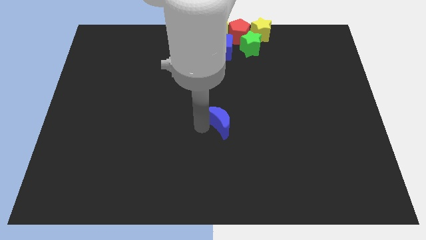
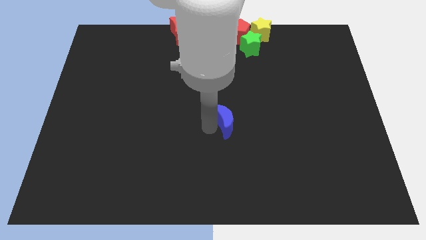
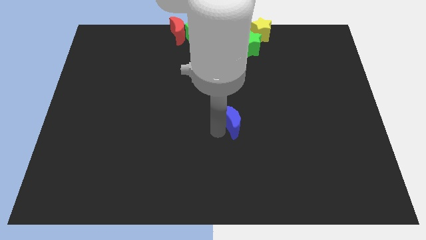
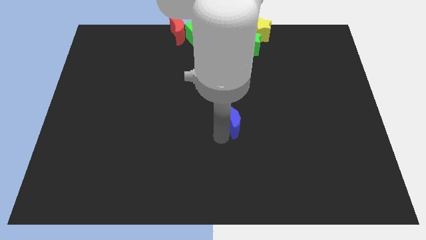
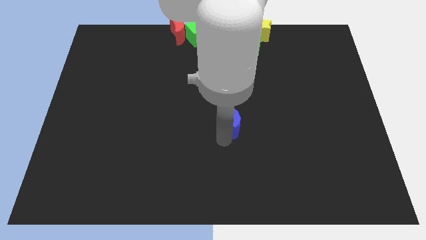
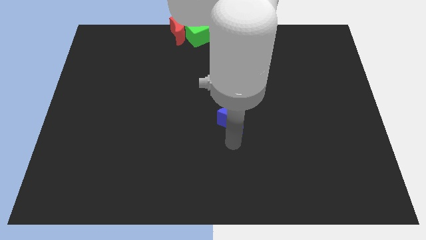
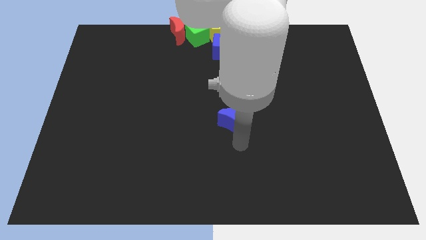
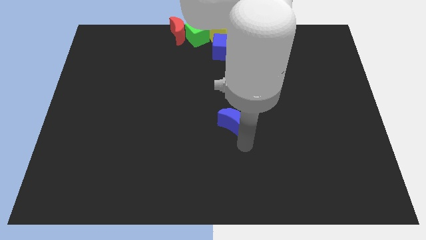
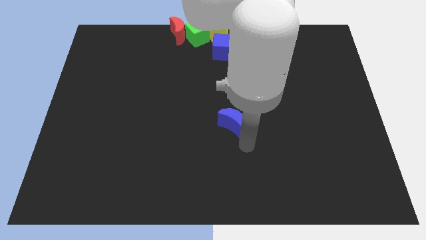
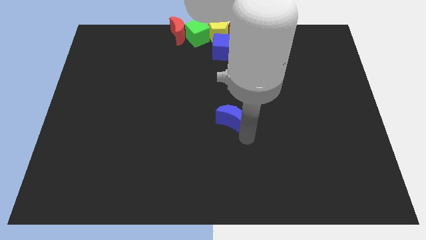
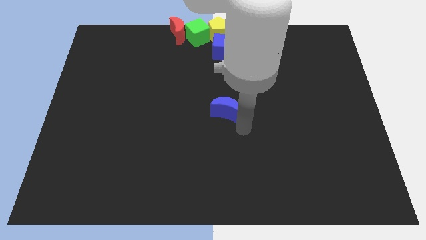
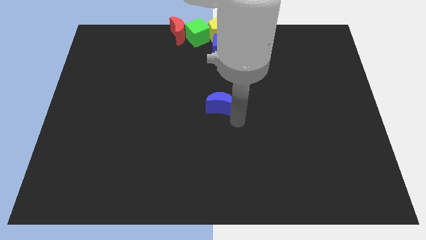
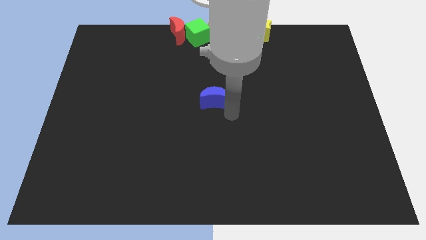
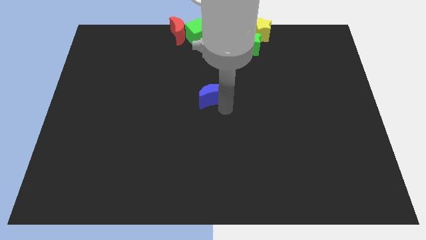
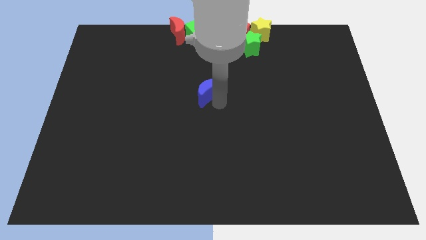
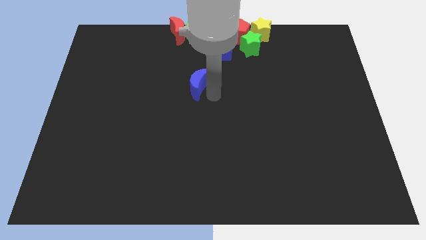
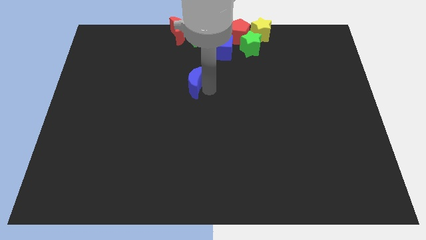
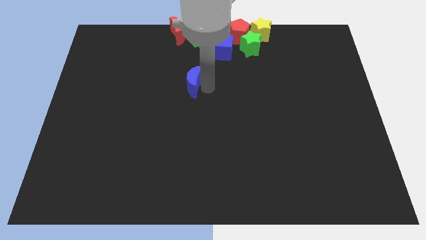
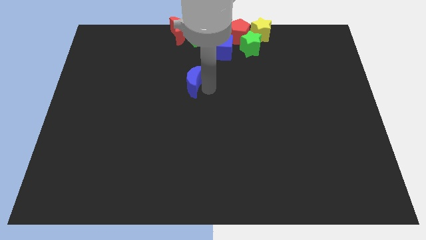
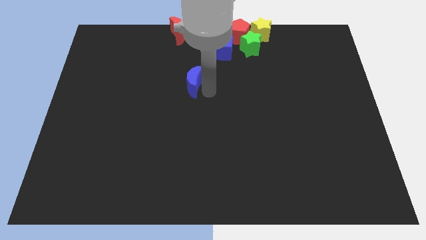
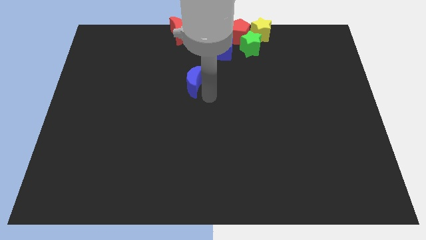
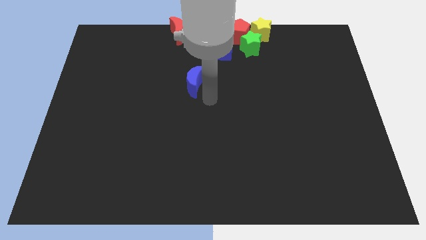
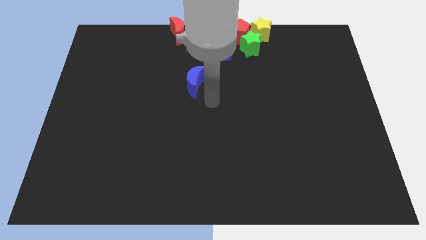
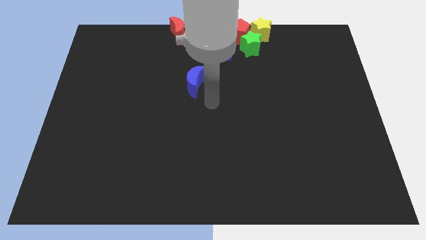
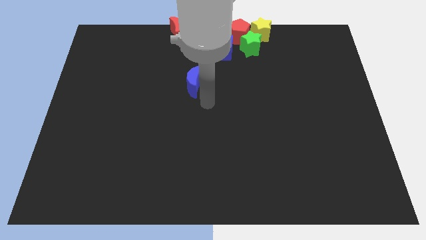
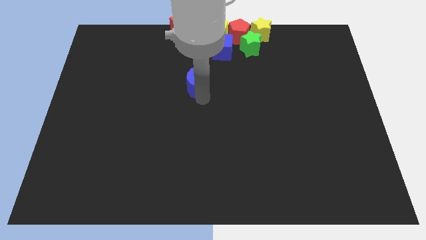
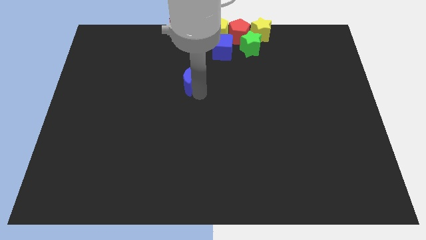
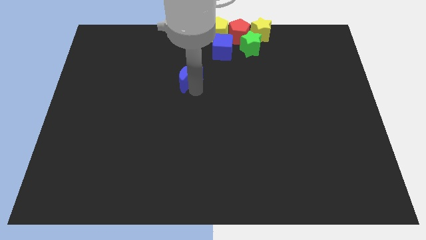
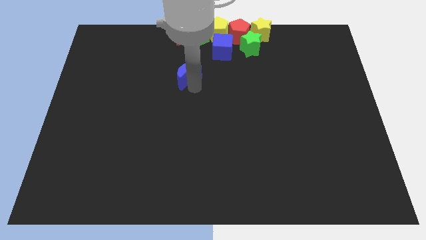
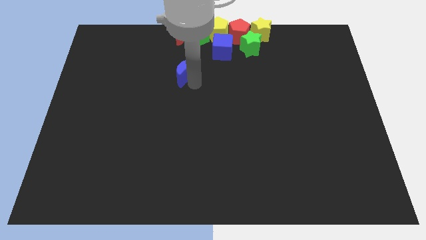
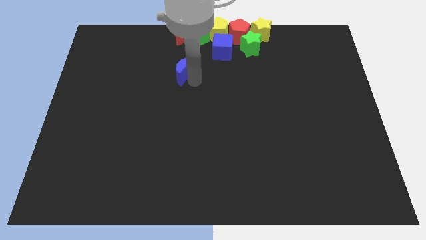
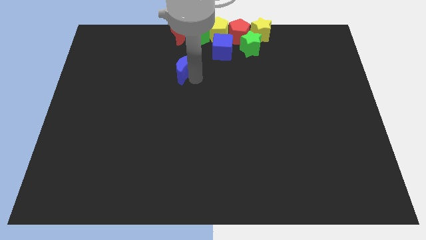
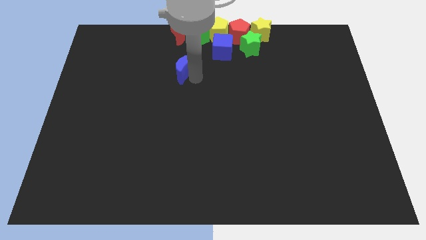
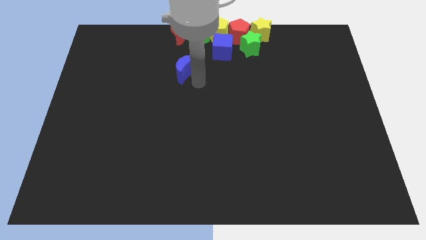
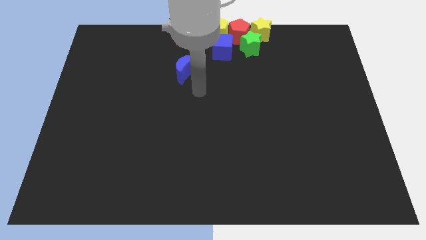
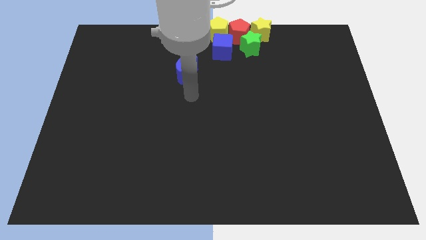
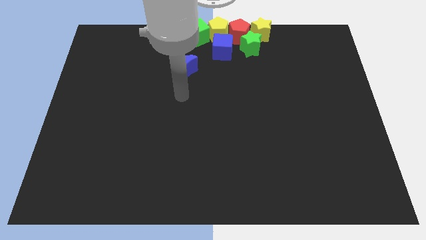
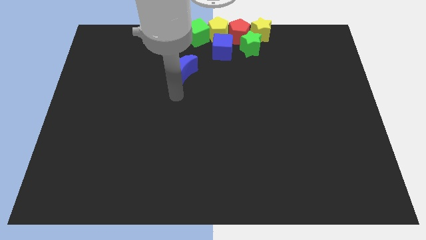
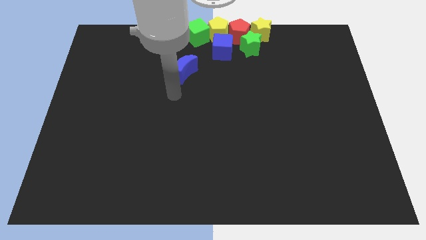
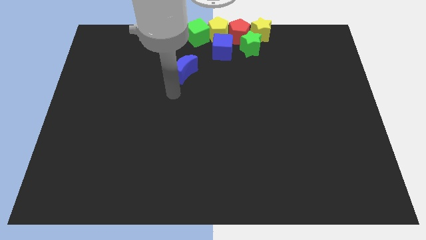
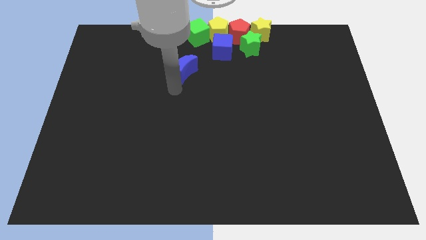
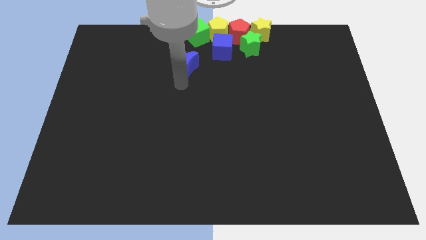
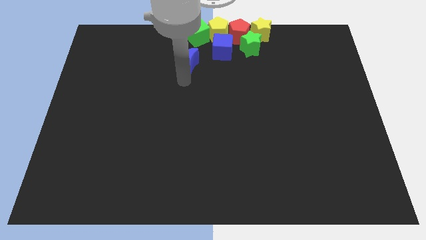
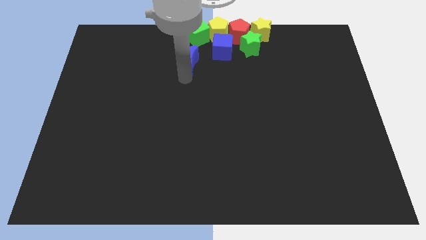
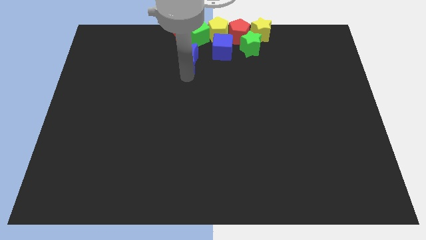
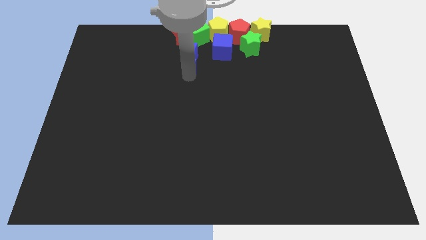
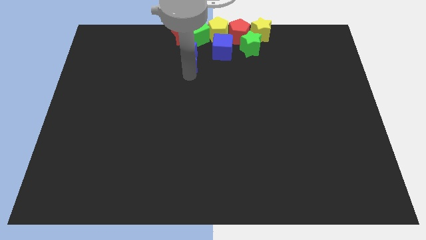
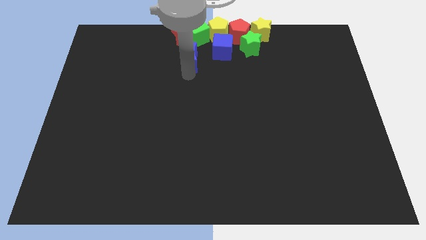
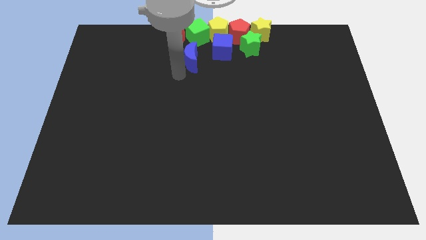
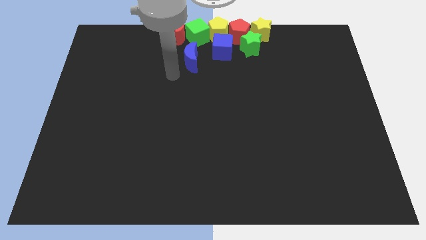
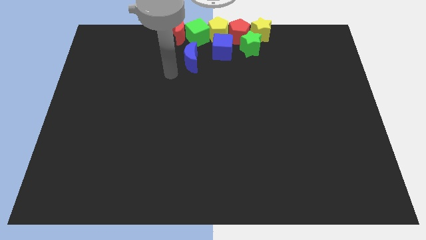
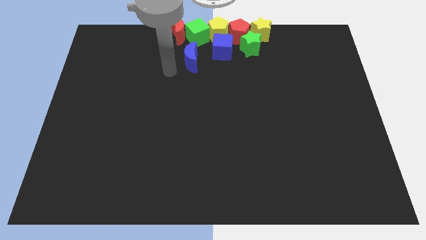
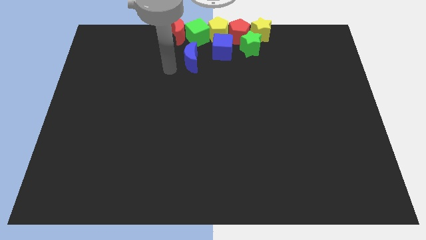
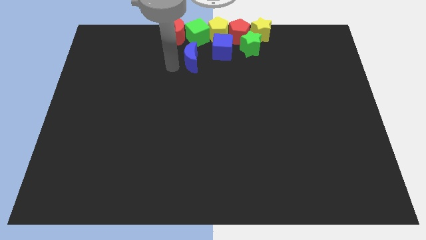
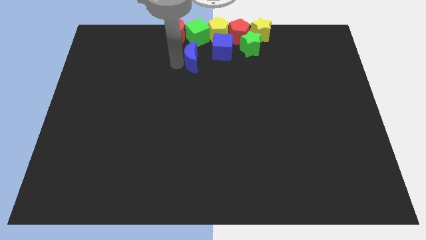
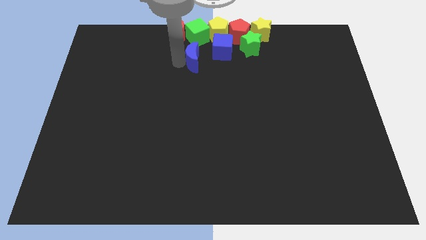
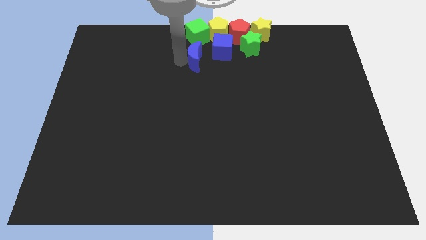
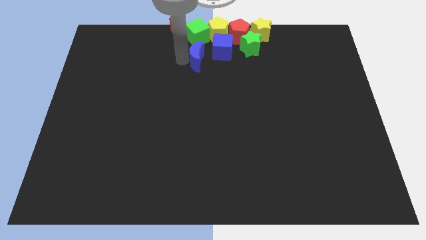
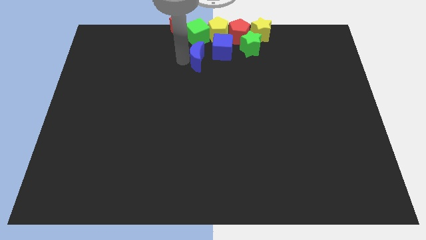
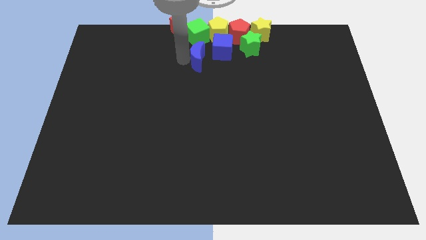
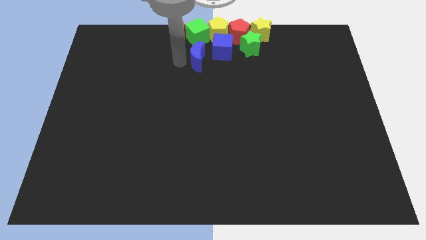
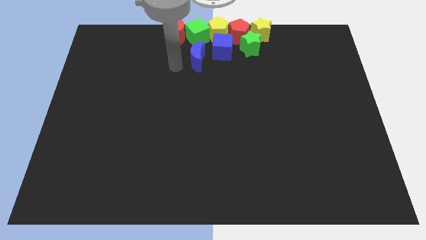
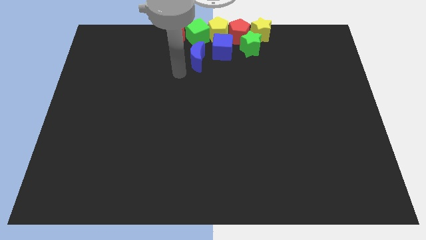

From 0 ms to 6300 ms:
place the blue moon below the green cube

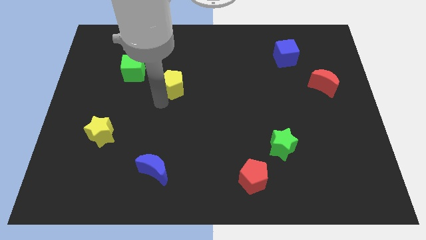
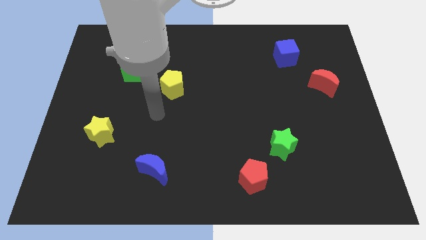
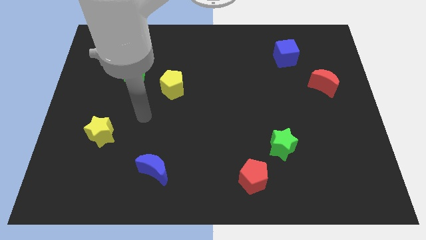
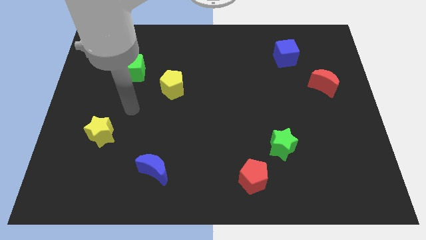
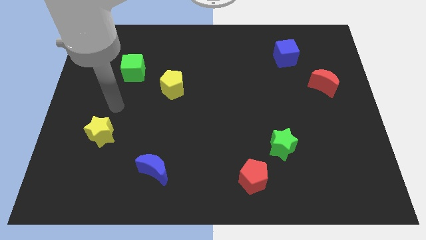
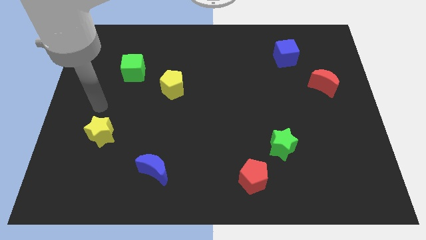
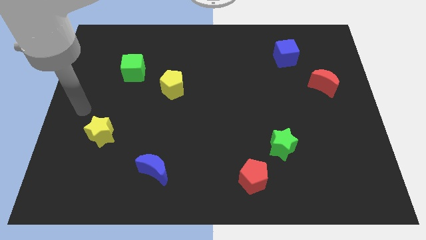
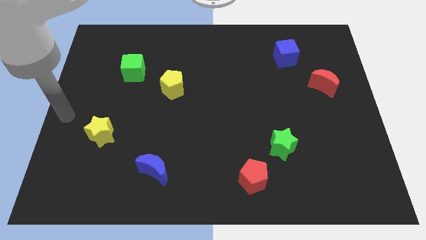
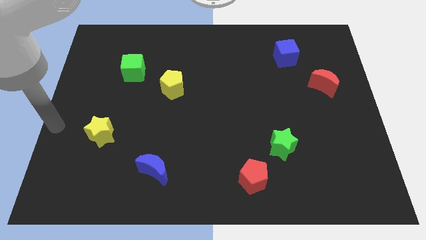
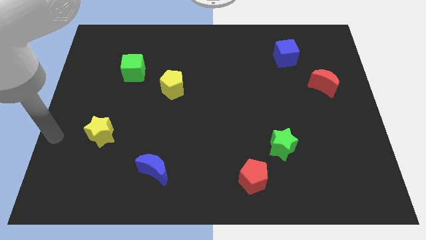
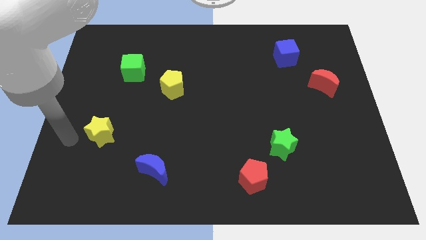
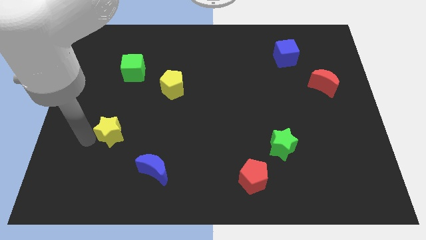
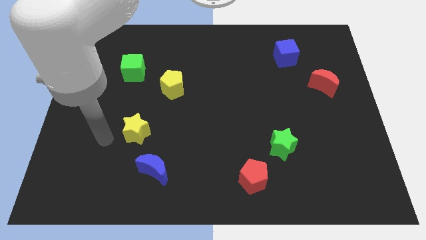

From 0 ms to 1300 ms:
point the arm to the left of the yellow star

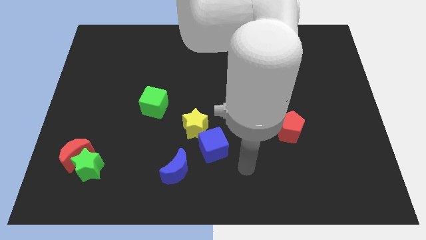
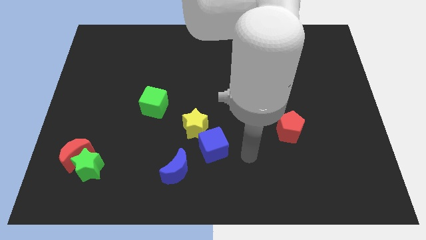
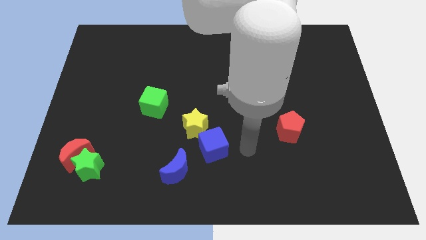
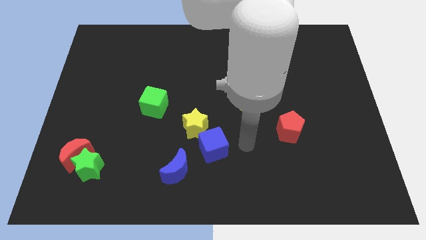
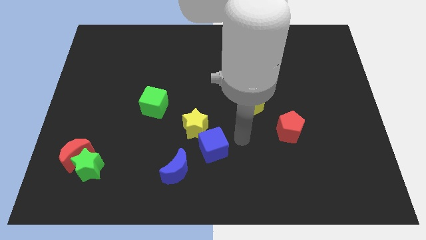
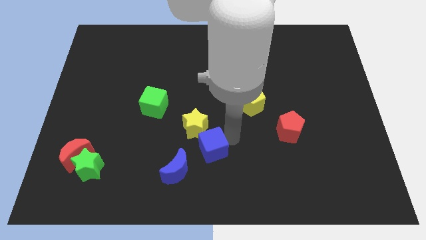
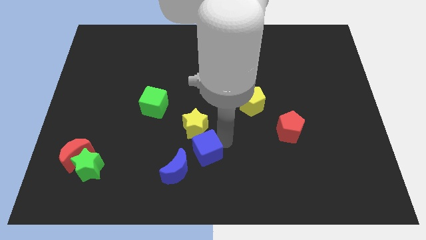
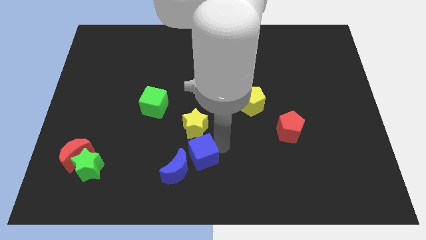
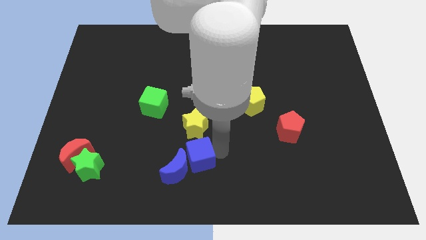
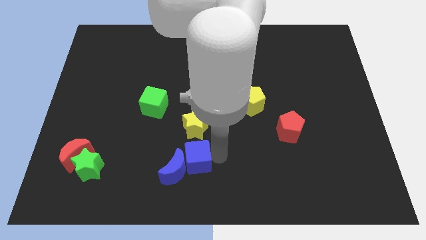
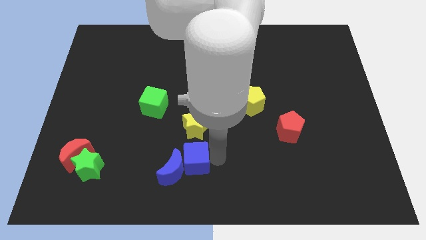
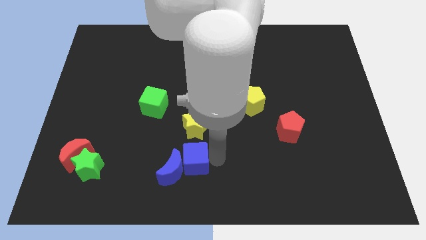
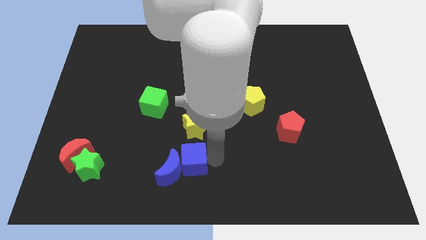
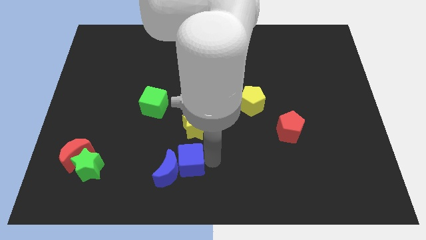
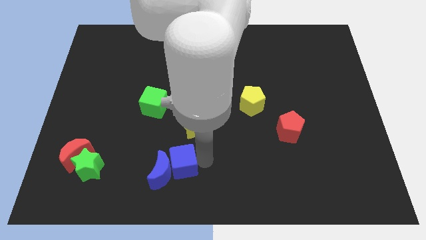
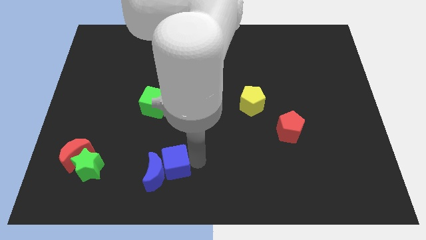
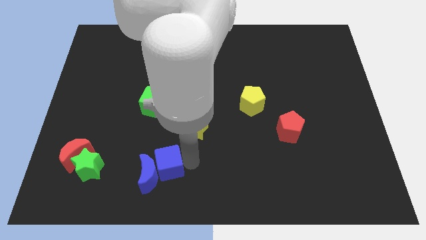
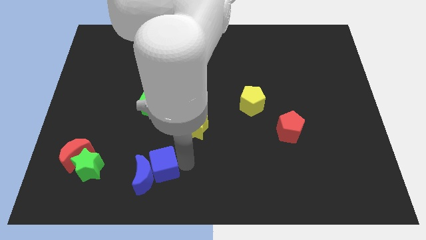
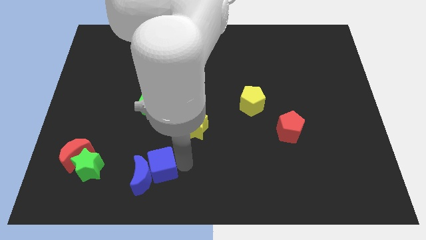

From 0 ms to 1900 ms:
push the blue cube into the blue moon
